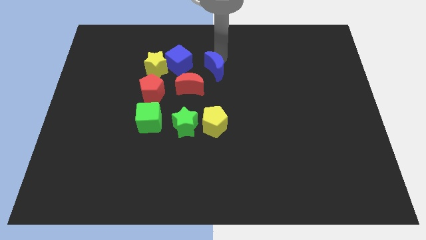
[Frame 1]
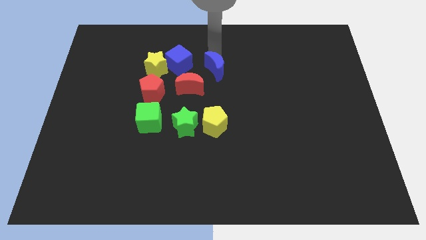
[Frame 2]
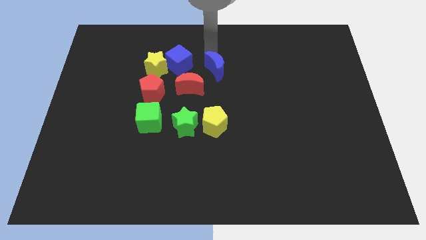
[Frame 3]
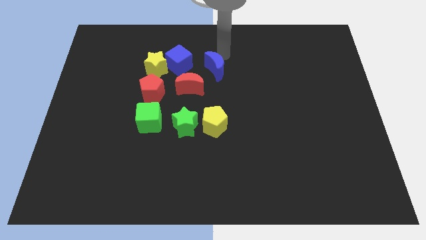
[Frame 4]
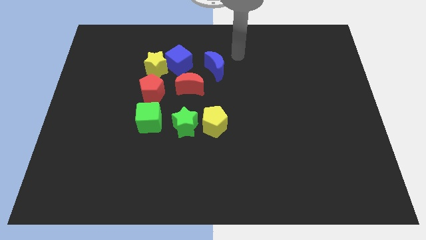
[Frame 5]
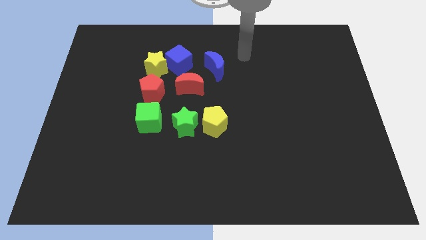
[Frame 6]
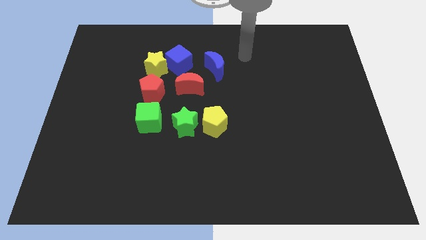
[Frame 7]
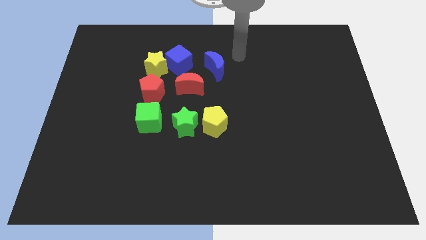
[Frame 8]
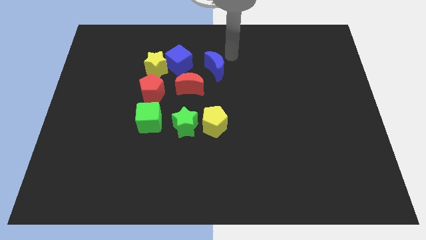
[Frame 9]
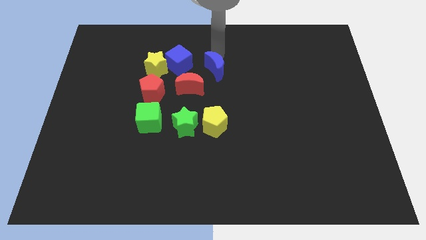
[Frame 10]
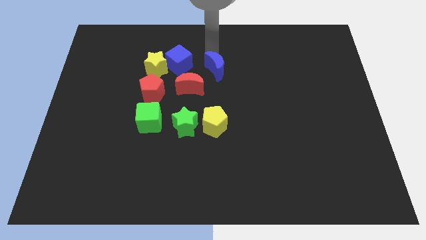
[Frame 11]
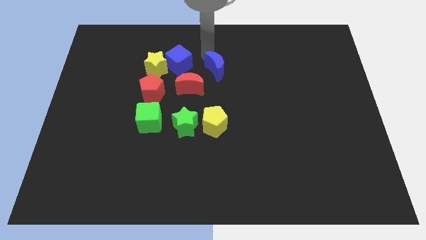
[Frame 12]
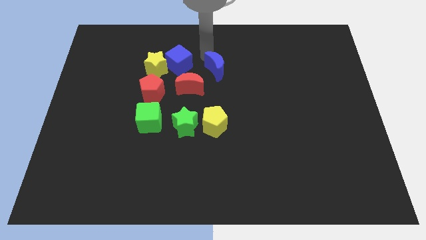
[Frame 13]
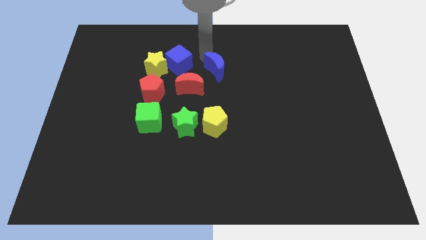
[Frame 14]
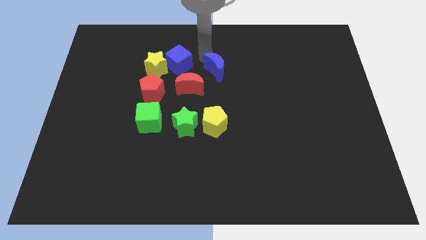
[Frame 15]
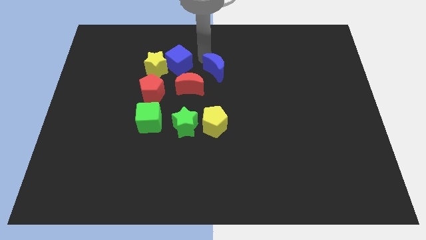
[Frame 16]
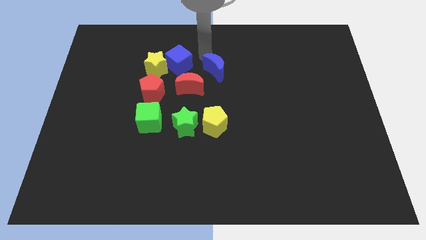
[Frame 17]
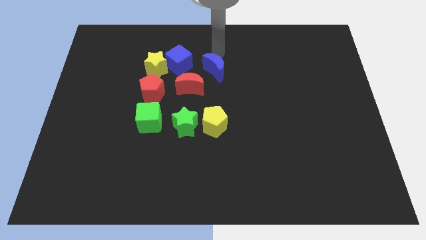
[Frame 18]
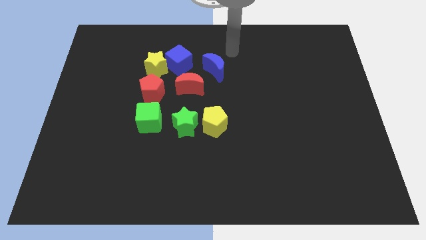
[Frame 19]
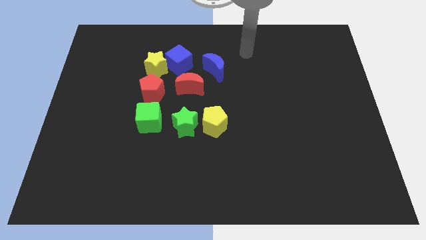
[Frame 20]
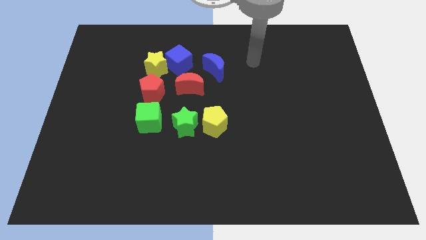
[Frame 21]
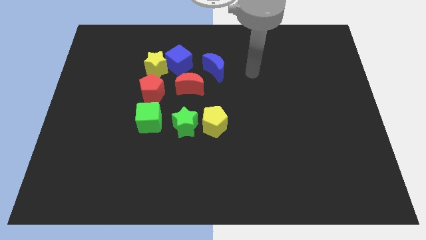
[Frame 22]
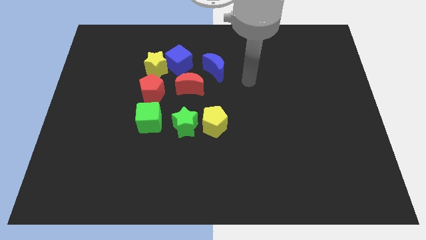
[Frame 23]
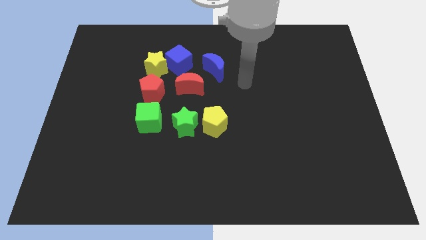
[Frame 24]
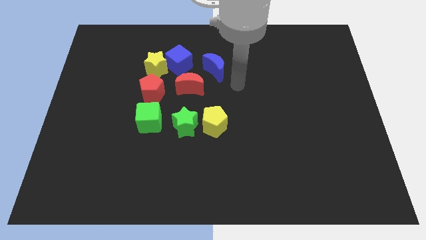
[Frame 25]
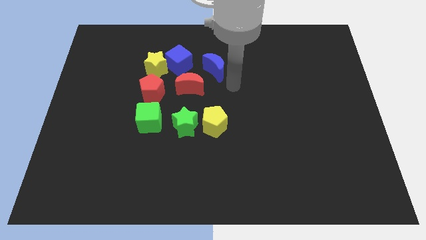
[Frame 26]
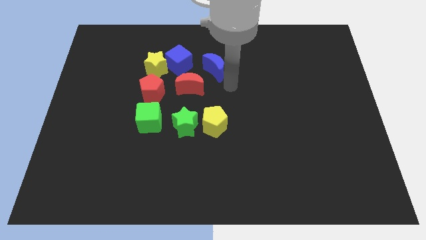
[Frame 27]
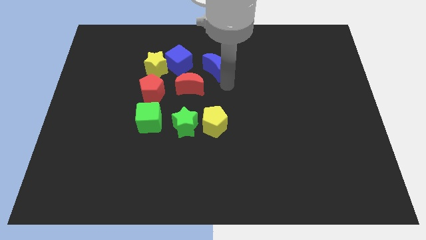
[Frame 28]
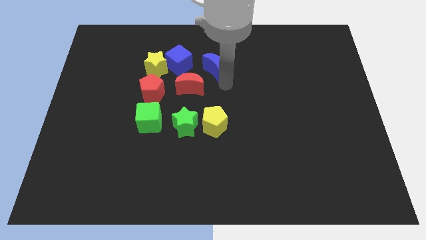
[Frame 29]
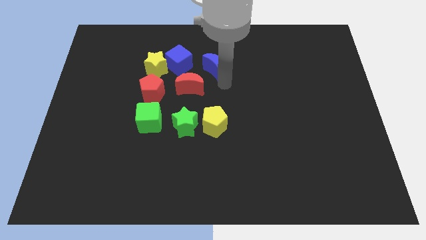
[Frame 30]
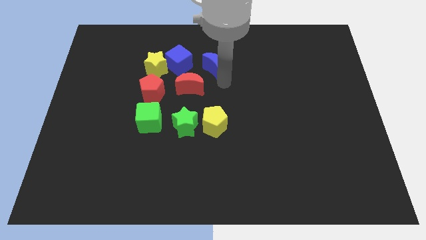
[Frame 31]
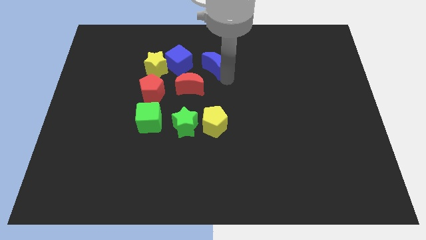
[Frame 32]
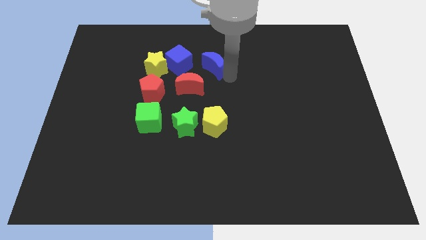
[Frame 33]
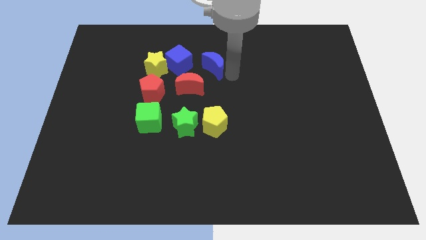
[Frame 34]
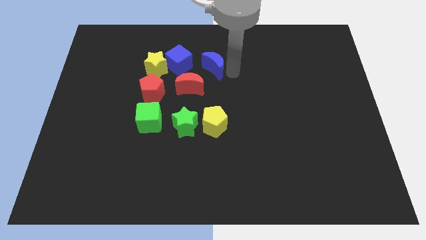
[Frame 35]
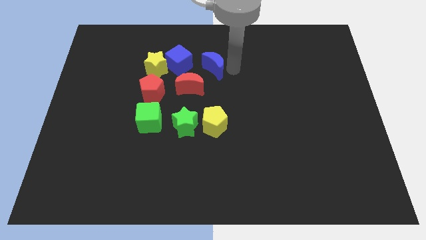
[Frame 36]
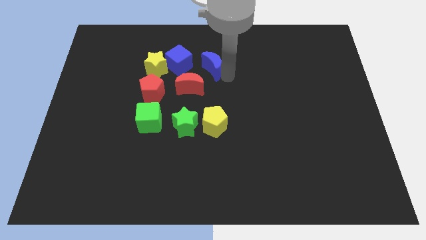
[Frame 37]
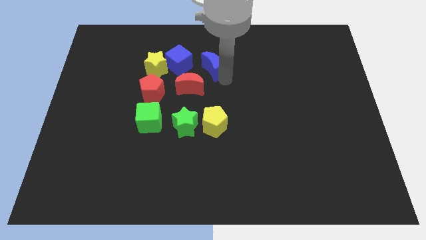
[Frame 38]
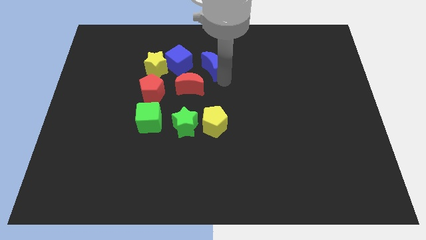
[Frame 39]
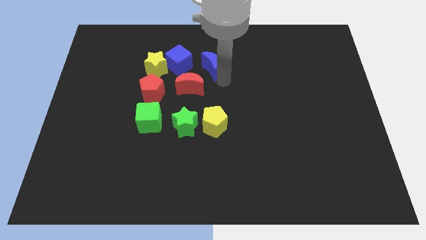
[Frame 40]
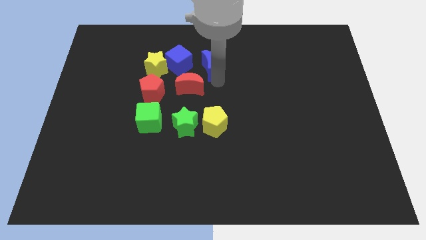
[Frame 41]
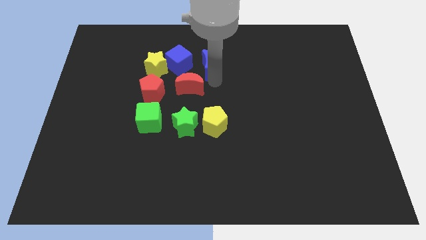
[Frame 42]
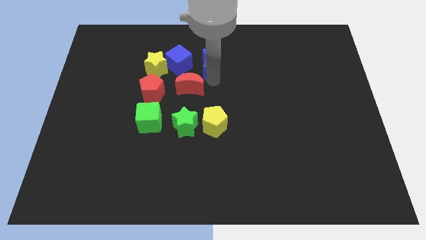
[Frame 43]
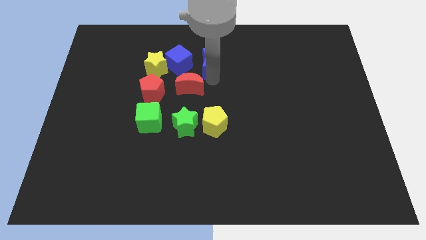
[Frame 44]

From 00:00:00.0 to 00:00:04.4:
push the blue crescent slightly to the left

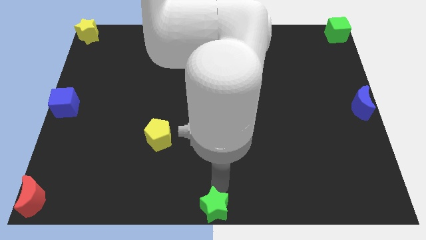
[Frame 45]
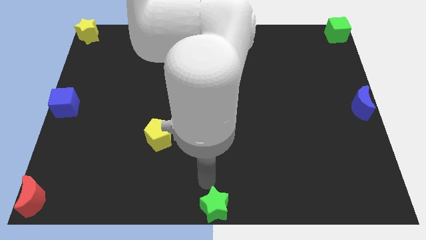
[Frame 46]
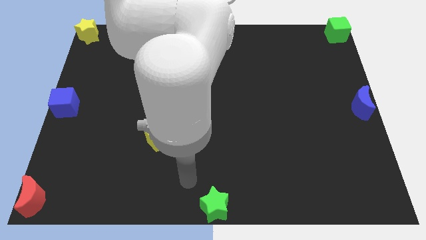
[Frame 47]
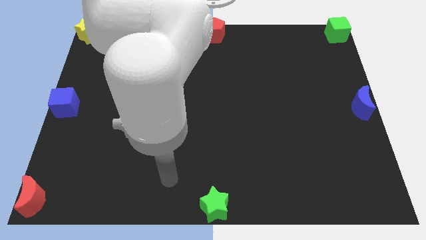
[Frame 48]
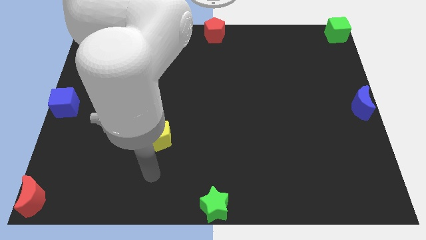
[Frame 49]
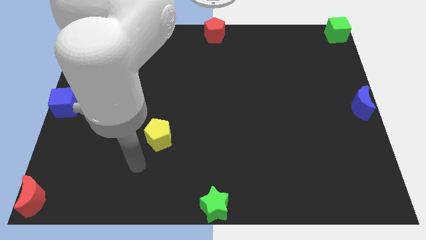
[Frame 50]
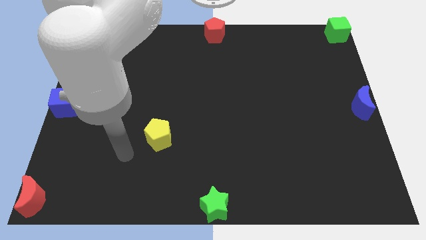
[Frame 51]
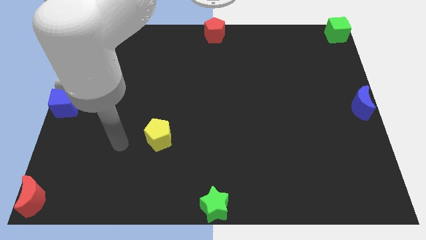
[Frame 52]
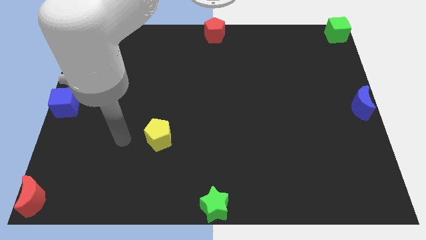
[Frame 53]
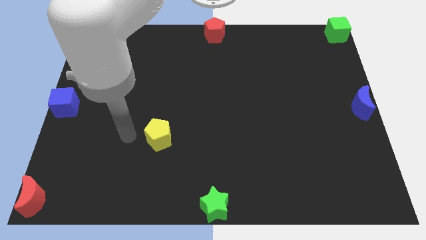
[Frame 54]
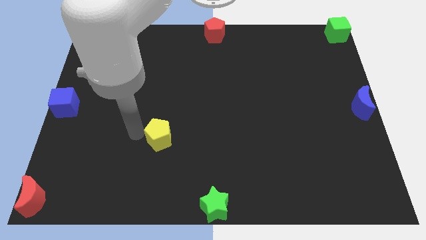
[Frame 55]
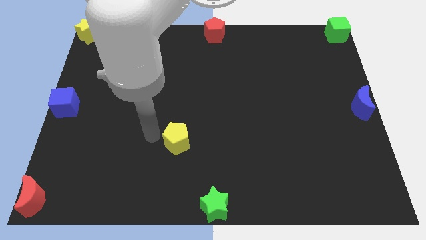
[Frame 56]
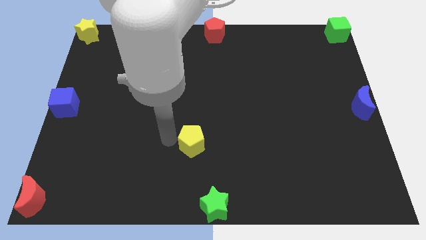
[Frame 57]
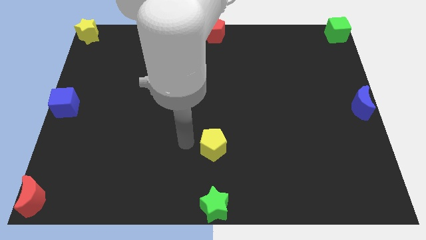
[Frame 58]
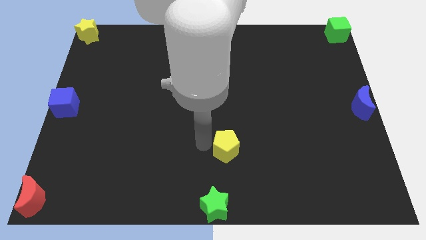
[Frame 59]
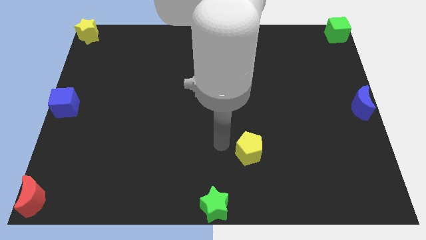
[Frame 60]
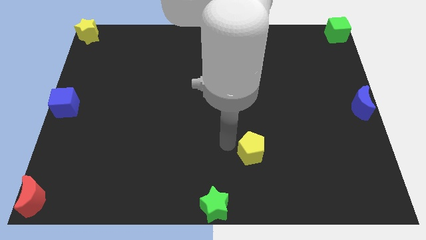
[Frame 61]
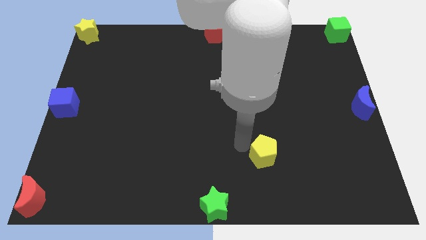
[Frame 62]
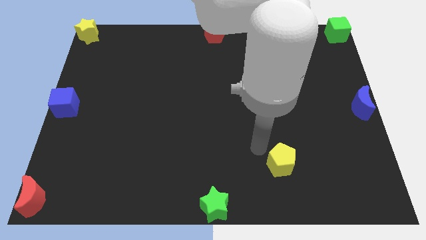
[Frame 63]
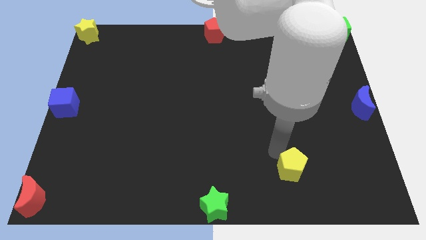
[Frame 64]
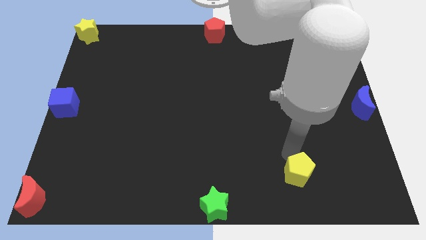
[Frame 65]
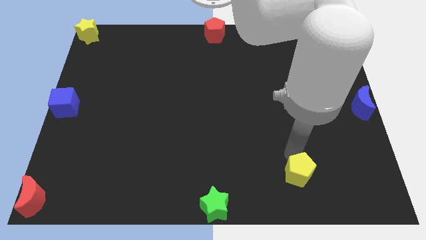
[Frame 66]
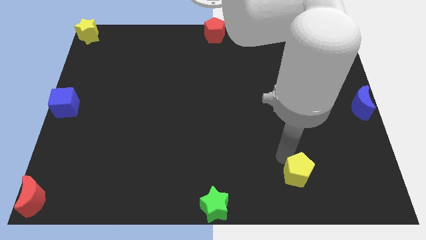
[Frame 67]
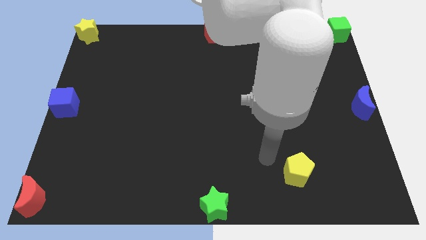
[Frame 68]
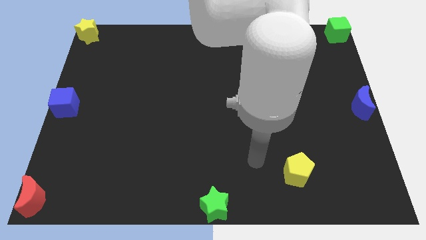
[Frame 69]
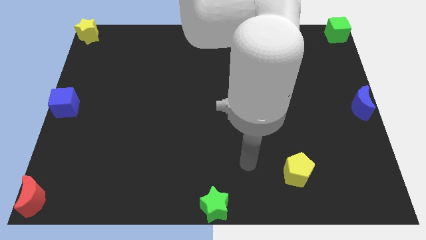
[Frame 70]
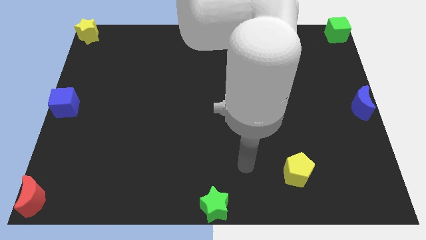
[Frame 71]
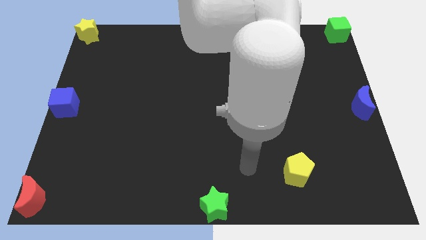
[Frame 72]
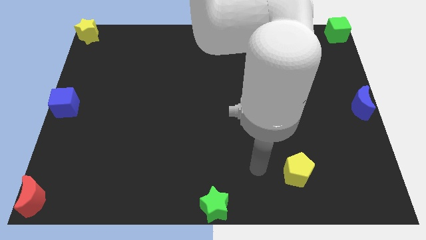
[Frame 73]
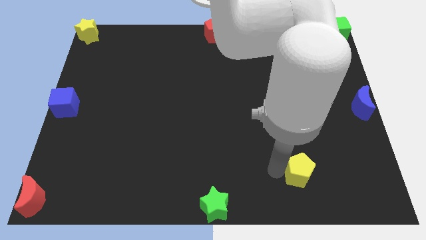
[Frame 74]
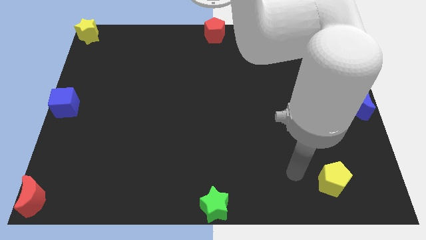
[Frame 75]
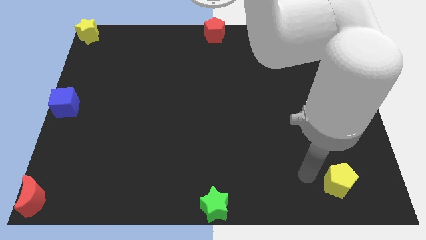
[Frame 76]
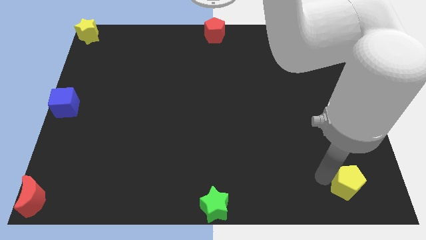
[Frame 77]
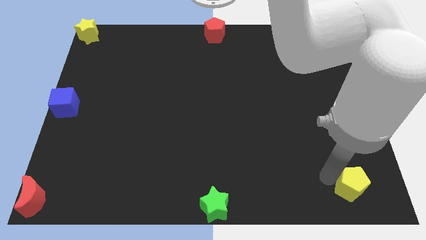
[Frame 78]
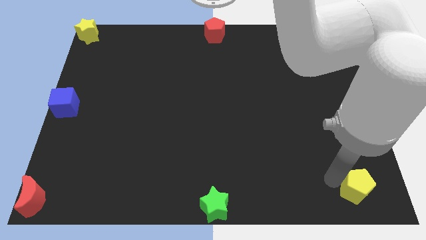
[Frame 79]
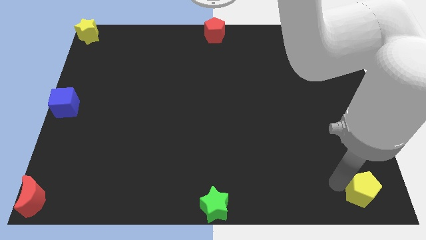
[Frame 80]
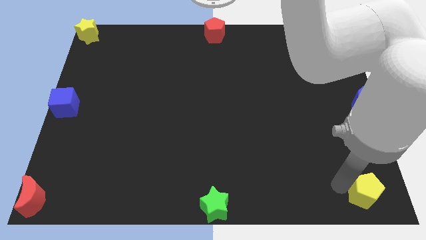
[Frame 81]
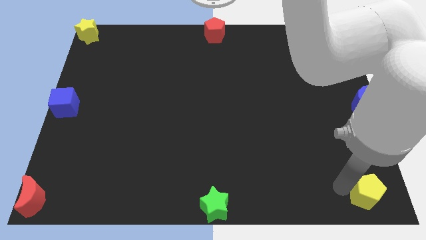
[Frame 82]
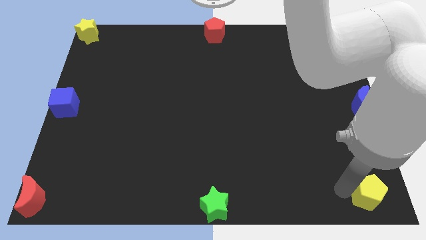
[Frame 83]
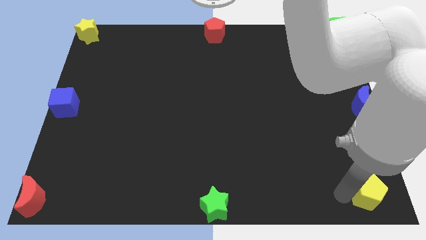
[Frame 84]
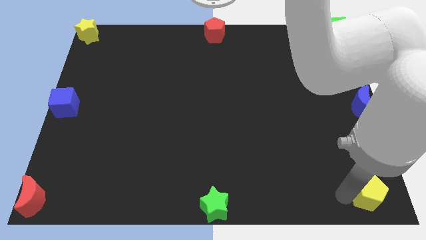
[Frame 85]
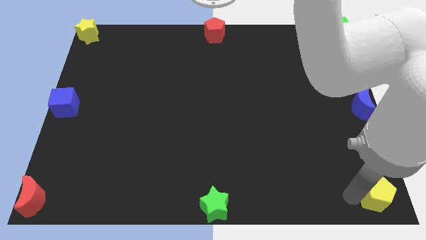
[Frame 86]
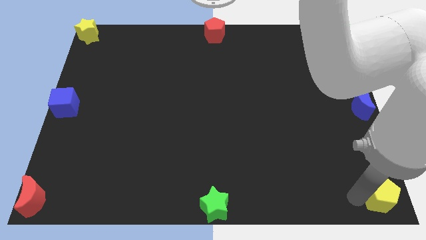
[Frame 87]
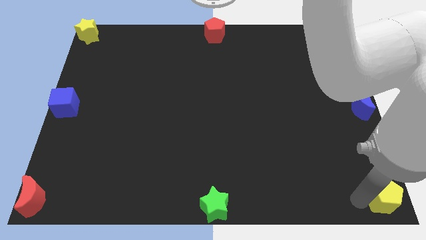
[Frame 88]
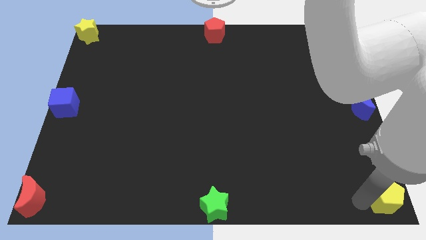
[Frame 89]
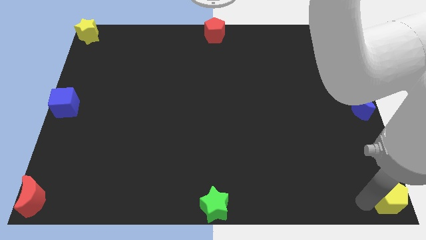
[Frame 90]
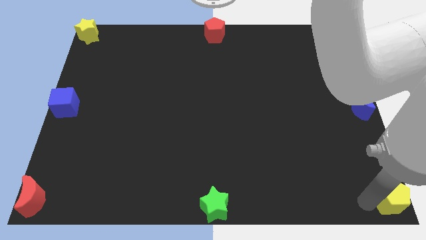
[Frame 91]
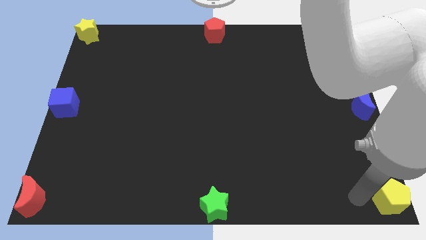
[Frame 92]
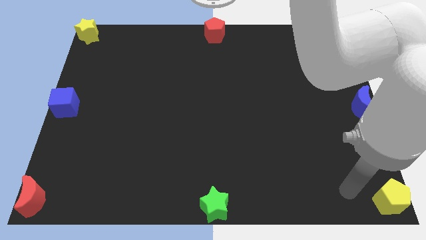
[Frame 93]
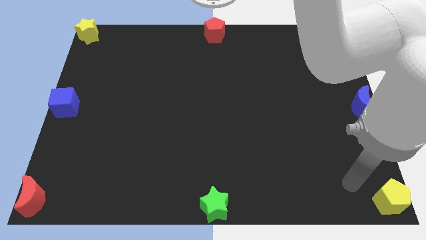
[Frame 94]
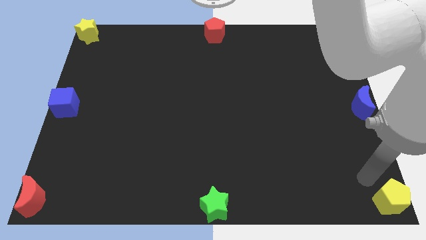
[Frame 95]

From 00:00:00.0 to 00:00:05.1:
move yellow pentagon to the right bottom
